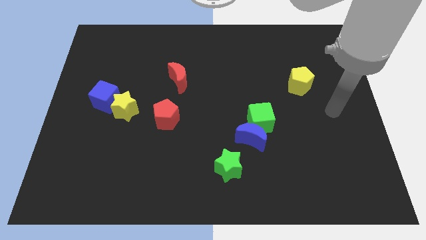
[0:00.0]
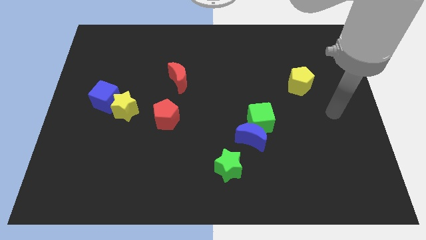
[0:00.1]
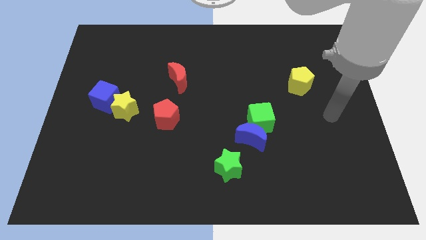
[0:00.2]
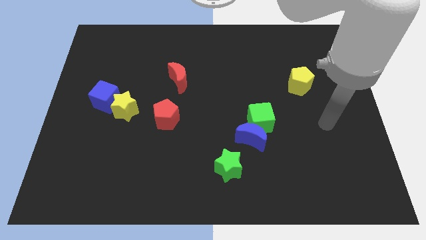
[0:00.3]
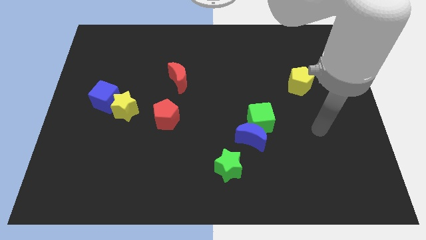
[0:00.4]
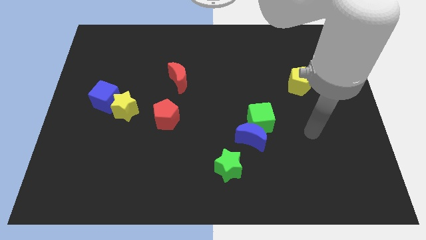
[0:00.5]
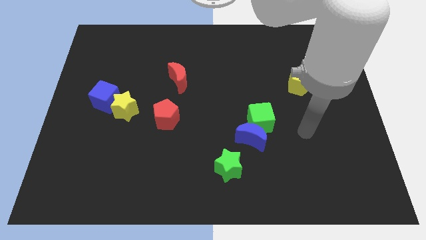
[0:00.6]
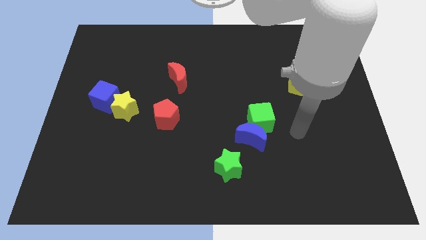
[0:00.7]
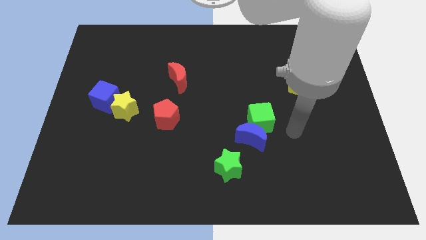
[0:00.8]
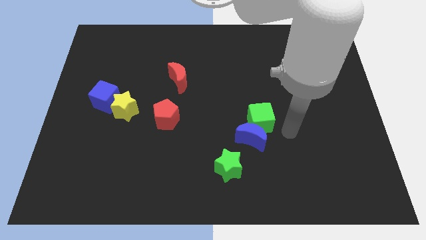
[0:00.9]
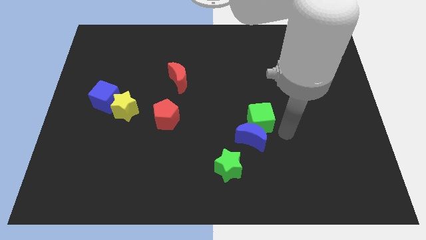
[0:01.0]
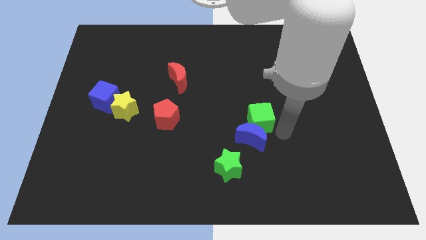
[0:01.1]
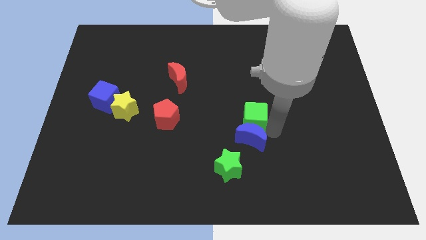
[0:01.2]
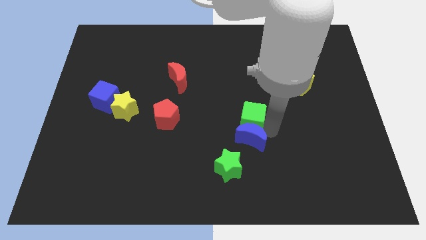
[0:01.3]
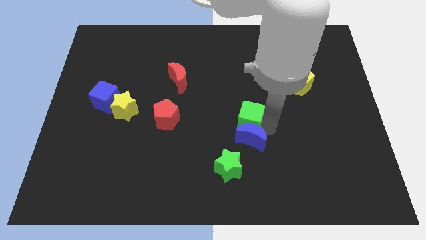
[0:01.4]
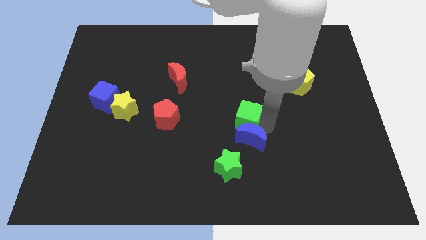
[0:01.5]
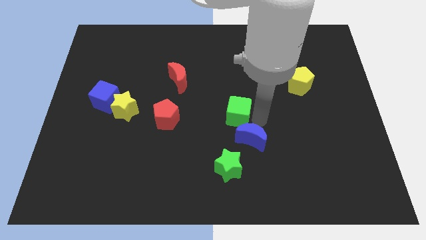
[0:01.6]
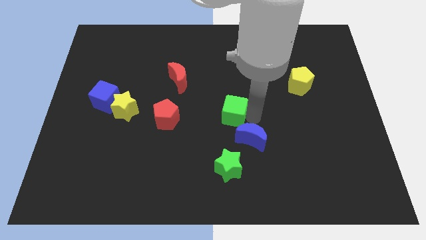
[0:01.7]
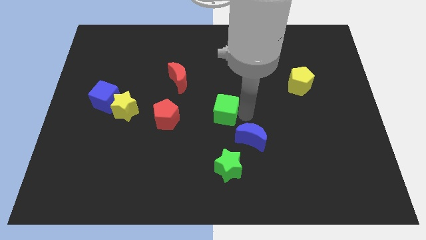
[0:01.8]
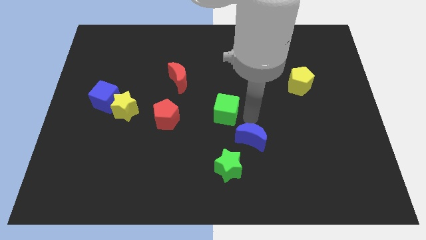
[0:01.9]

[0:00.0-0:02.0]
separate the green cube from blue moon

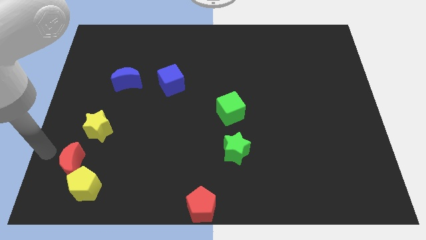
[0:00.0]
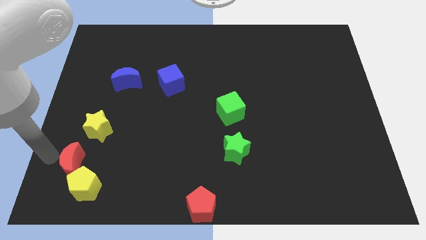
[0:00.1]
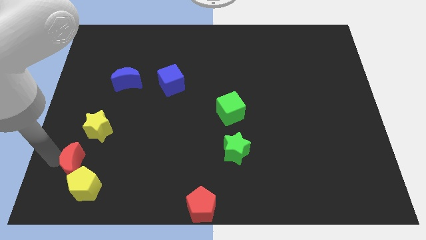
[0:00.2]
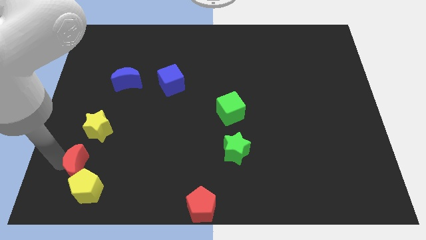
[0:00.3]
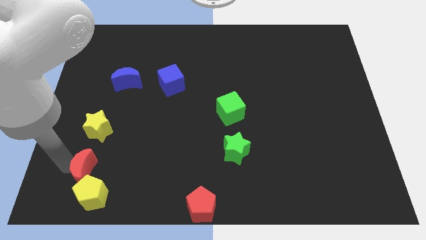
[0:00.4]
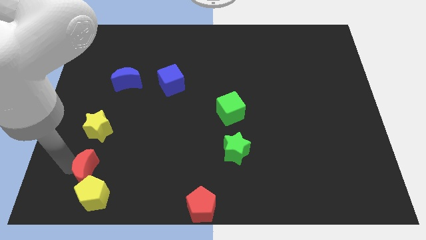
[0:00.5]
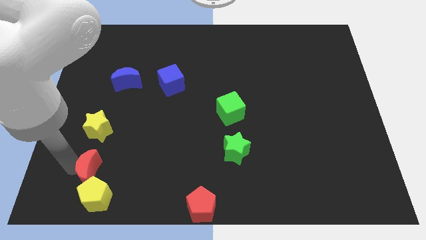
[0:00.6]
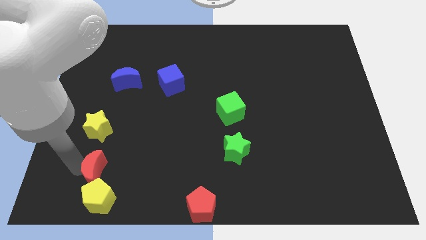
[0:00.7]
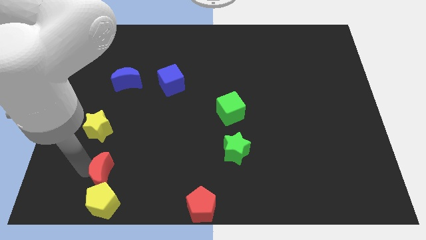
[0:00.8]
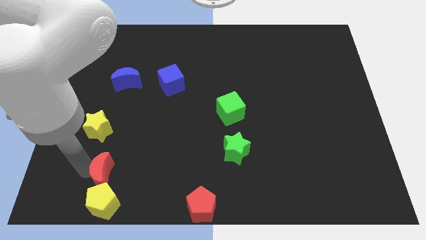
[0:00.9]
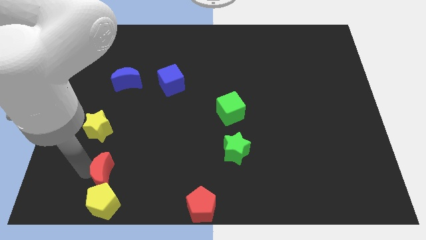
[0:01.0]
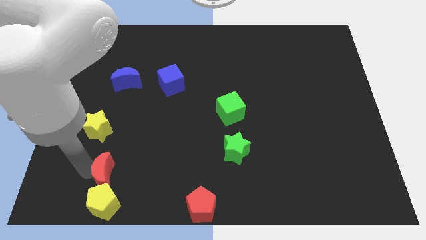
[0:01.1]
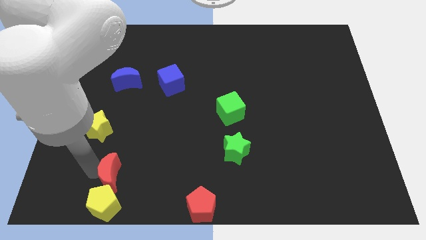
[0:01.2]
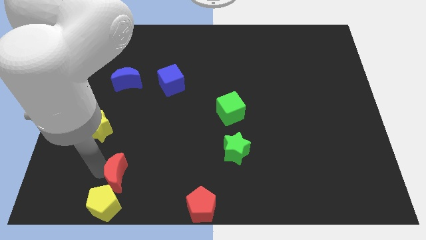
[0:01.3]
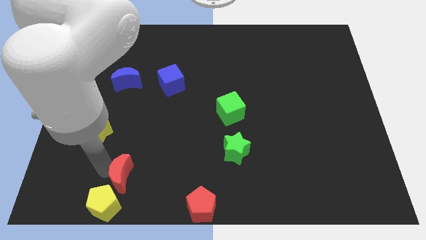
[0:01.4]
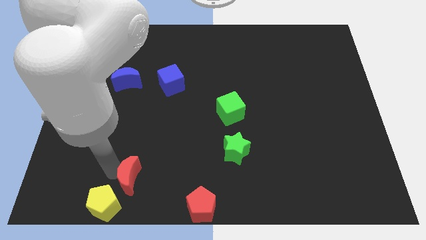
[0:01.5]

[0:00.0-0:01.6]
push the red crescent slightly to the right

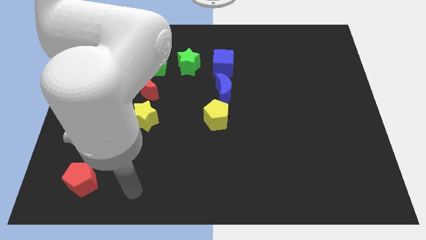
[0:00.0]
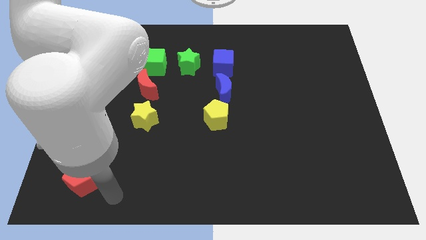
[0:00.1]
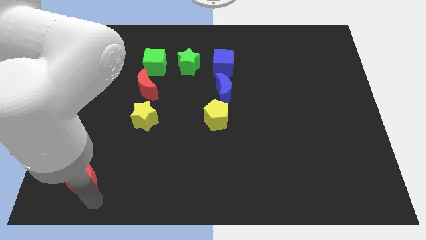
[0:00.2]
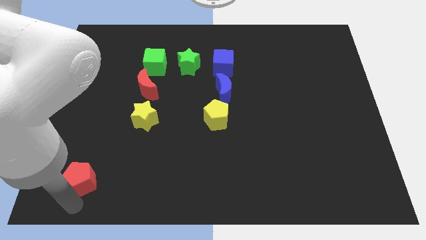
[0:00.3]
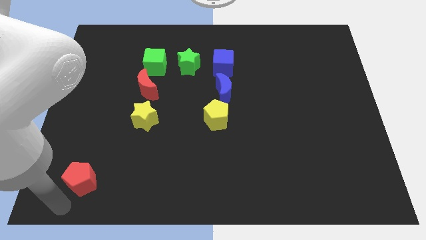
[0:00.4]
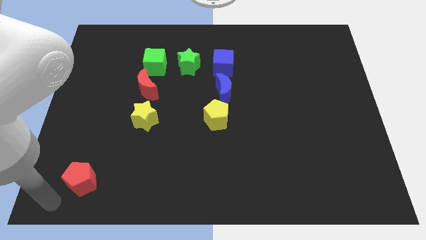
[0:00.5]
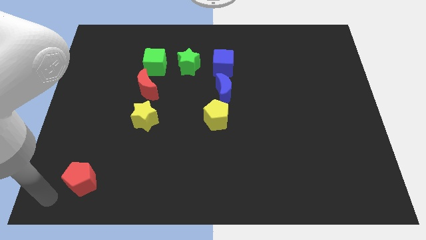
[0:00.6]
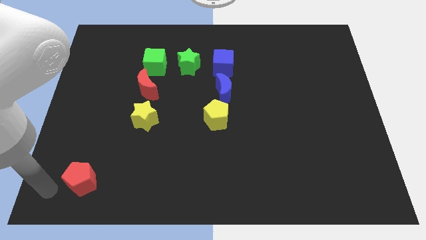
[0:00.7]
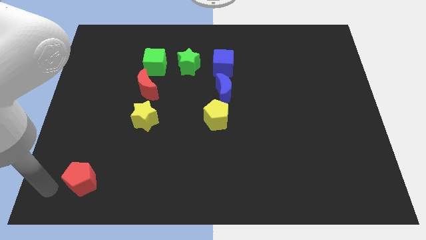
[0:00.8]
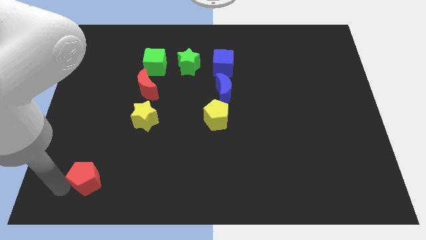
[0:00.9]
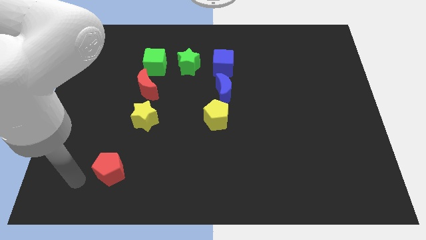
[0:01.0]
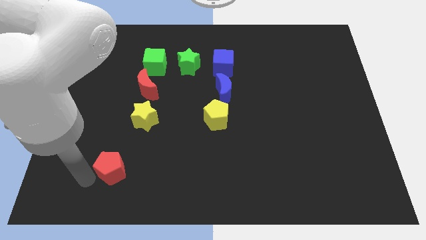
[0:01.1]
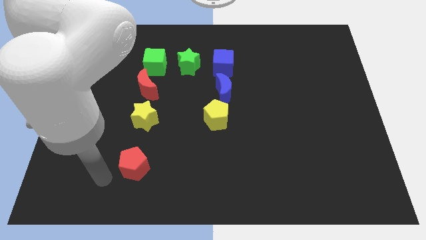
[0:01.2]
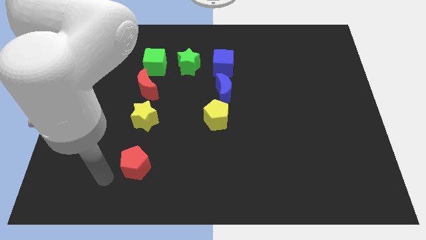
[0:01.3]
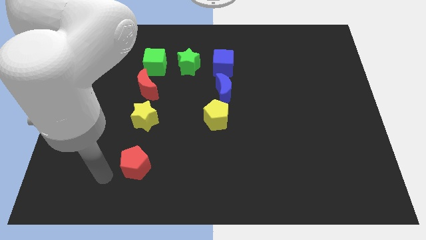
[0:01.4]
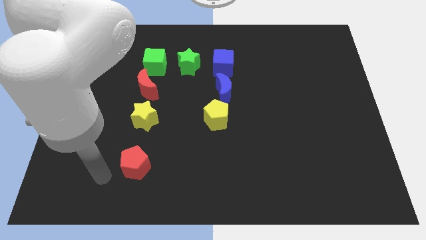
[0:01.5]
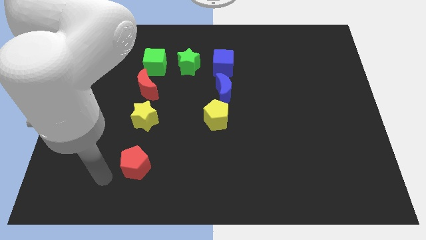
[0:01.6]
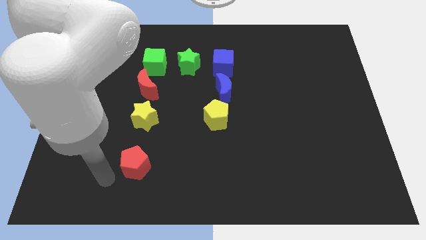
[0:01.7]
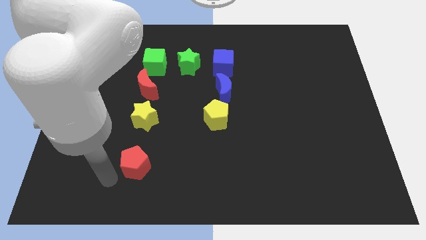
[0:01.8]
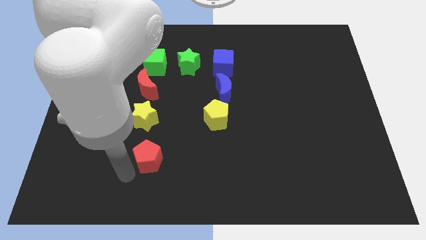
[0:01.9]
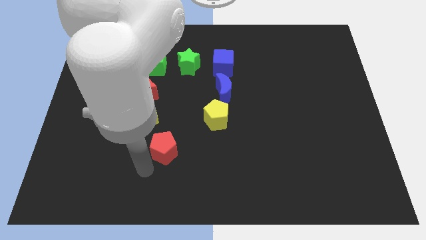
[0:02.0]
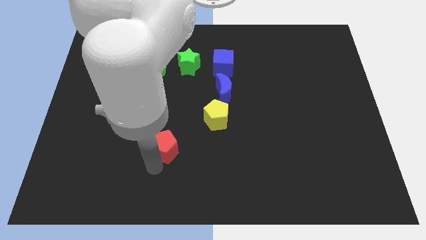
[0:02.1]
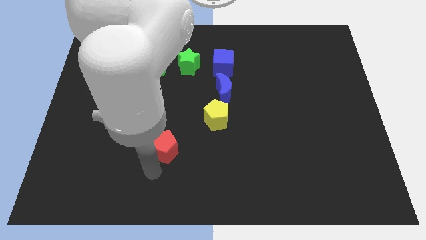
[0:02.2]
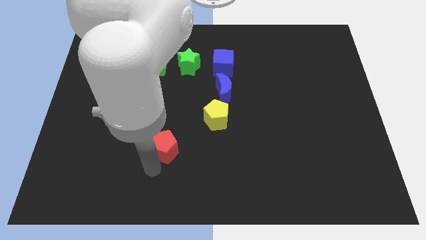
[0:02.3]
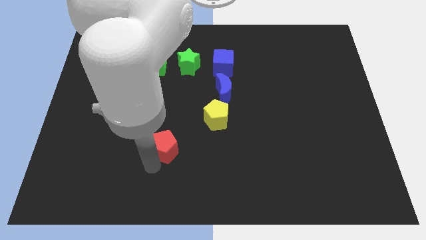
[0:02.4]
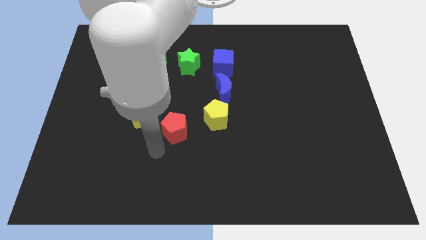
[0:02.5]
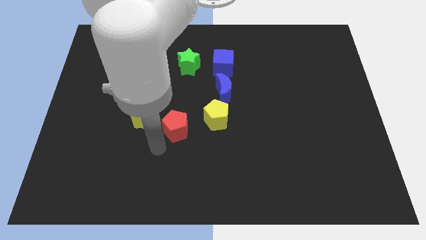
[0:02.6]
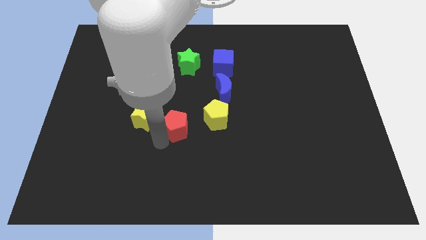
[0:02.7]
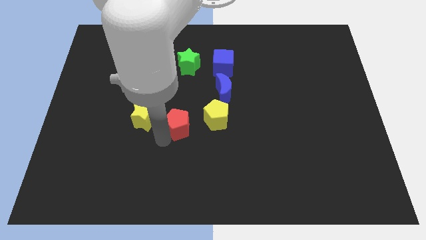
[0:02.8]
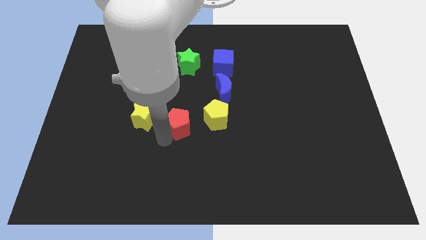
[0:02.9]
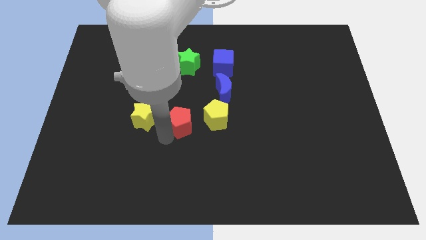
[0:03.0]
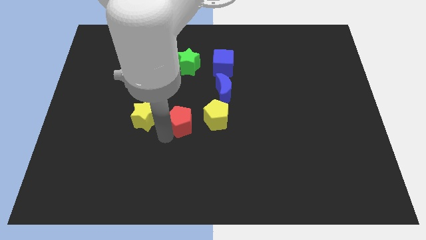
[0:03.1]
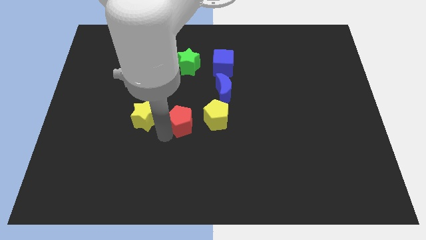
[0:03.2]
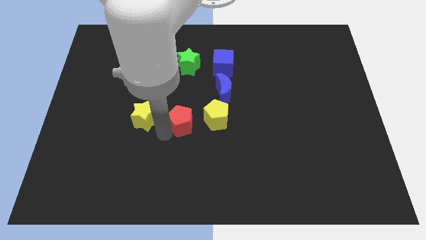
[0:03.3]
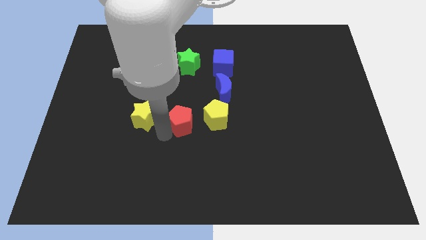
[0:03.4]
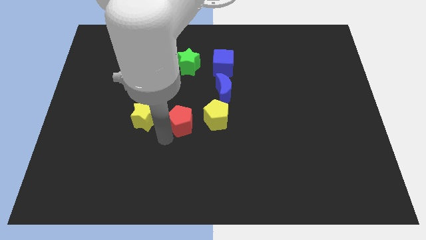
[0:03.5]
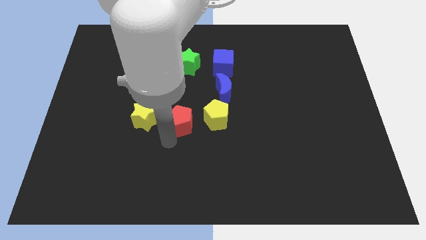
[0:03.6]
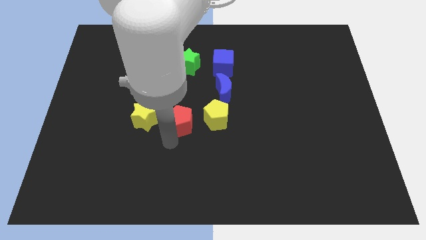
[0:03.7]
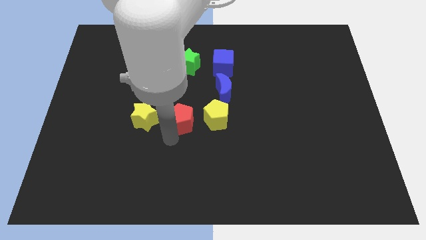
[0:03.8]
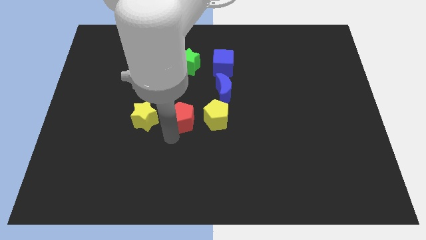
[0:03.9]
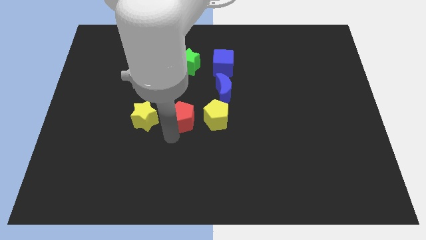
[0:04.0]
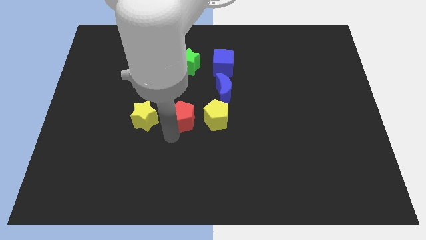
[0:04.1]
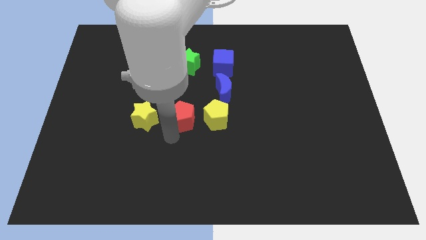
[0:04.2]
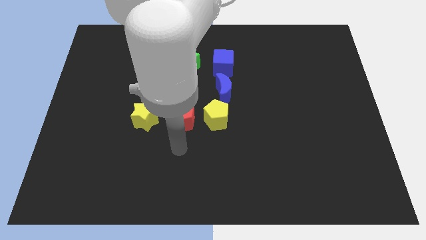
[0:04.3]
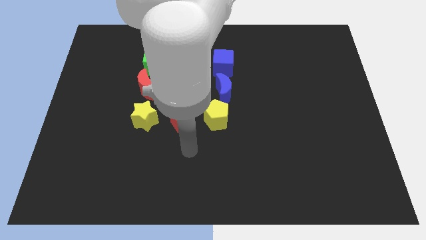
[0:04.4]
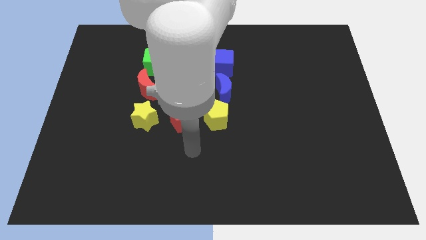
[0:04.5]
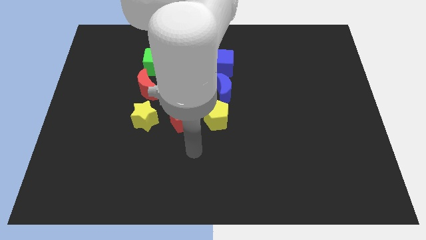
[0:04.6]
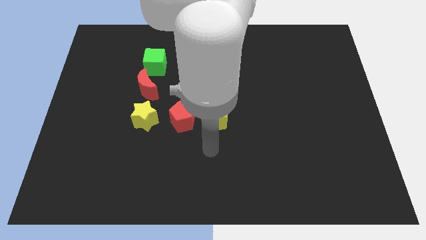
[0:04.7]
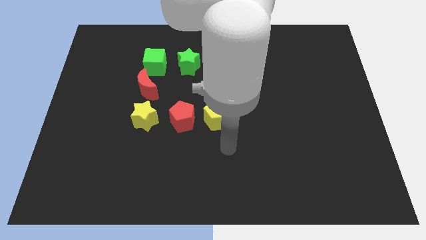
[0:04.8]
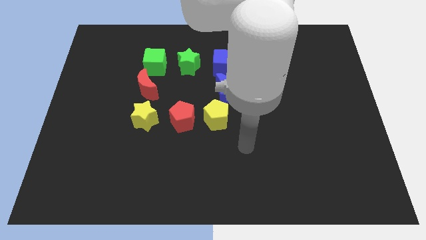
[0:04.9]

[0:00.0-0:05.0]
place red pentagon in between the yellow star and yellow pentagon

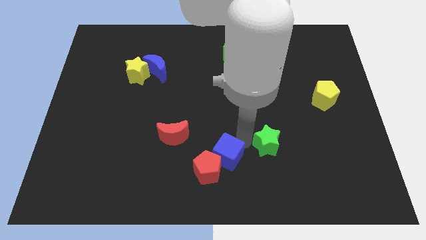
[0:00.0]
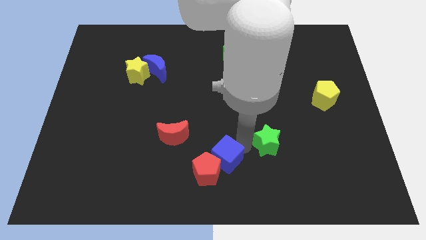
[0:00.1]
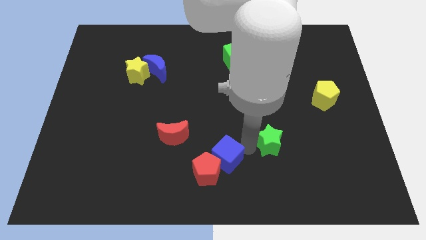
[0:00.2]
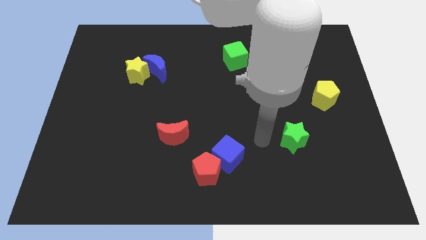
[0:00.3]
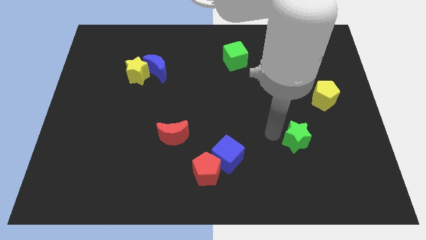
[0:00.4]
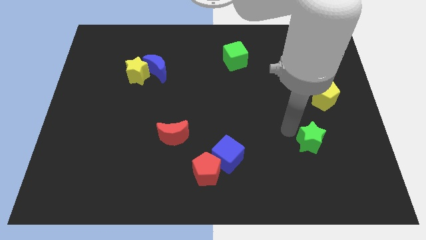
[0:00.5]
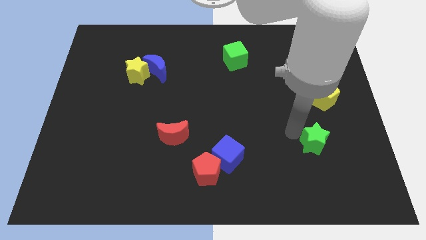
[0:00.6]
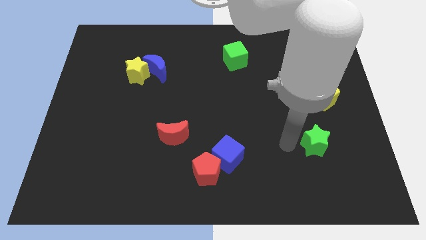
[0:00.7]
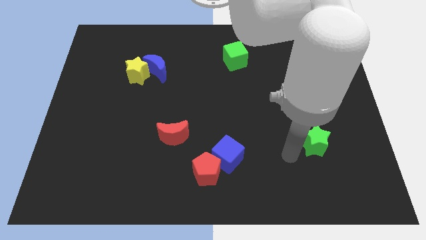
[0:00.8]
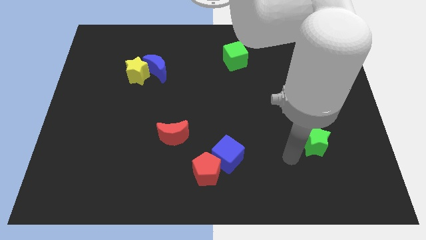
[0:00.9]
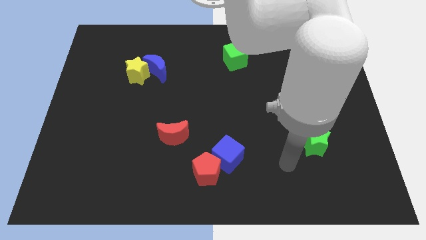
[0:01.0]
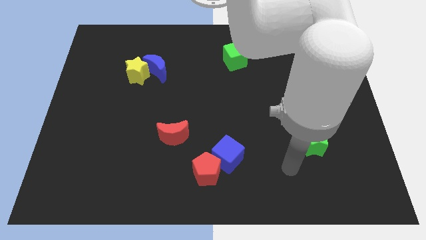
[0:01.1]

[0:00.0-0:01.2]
place the green star below the yellow pentagon
